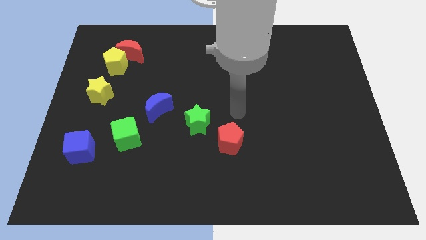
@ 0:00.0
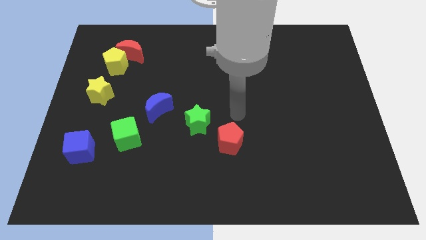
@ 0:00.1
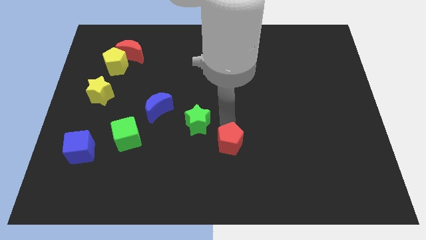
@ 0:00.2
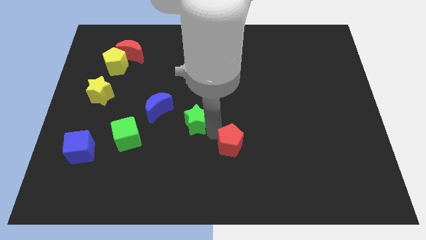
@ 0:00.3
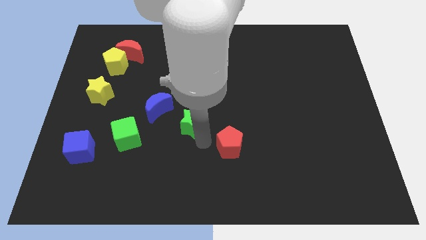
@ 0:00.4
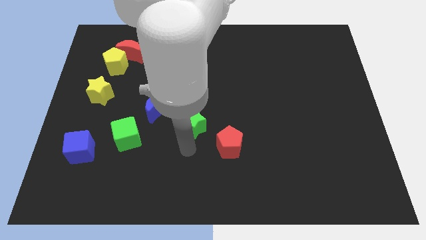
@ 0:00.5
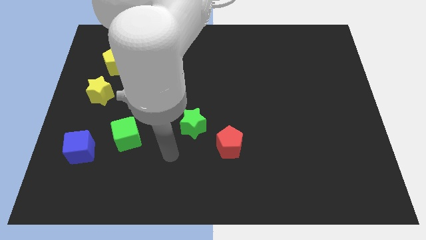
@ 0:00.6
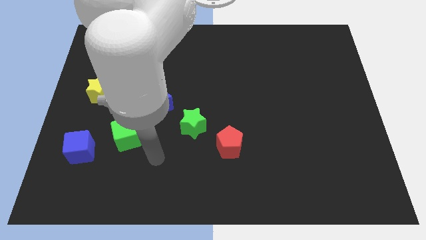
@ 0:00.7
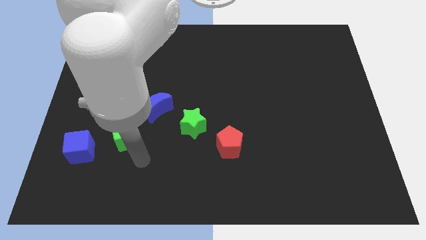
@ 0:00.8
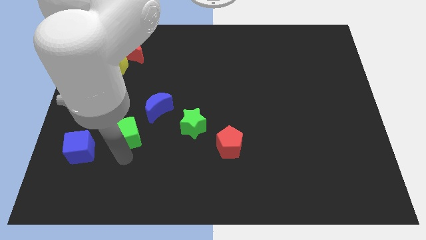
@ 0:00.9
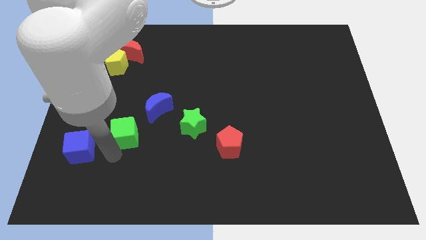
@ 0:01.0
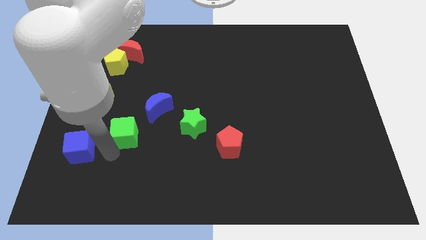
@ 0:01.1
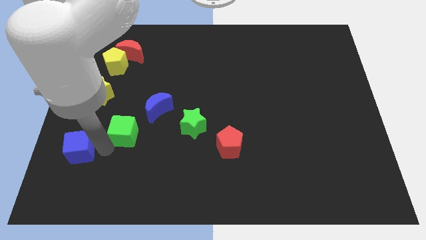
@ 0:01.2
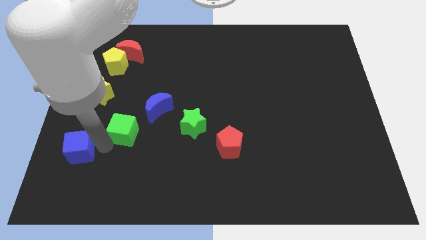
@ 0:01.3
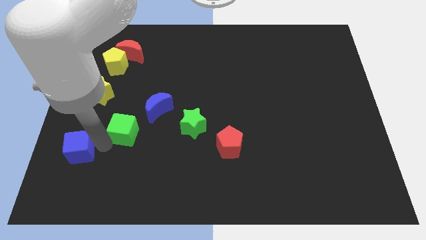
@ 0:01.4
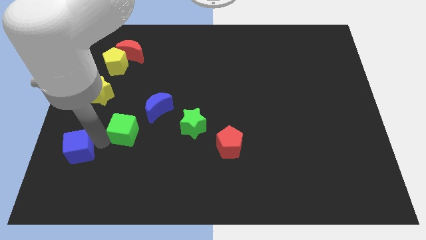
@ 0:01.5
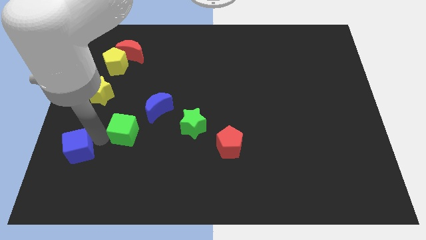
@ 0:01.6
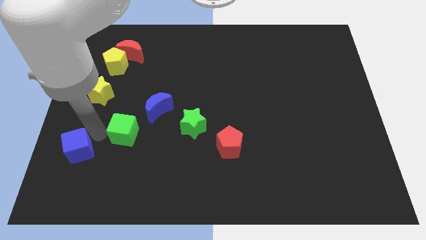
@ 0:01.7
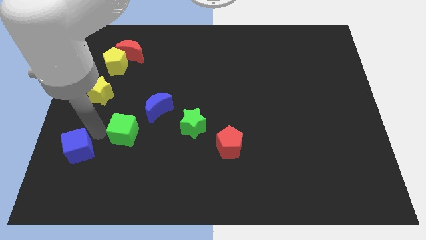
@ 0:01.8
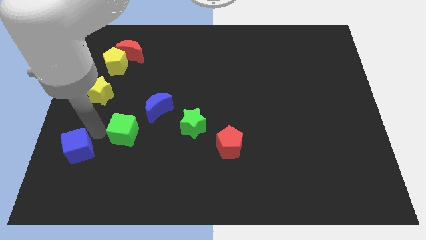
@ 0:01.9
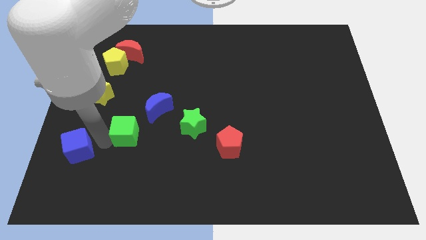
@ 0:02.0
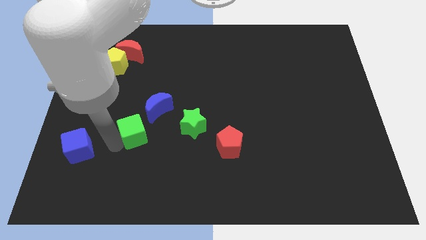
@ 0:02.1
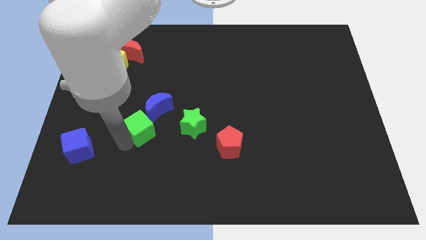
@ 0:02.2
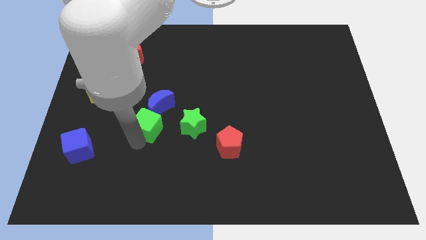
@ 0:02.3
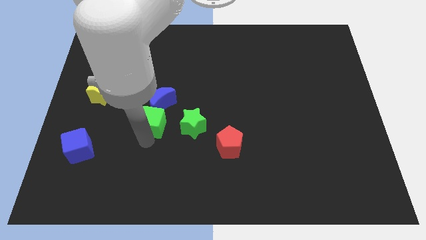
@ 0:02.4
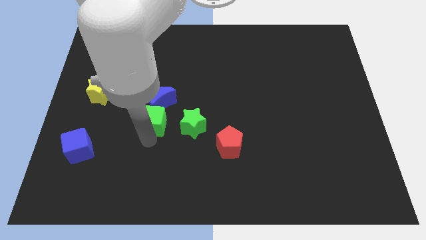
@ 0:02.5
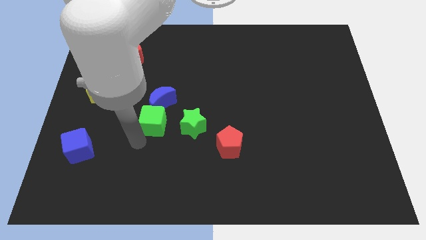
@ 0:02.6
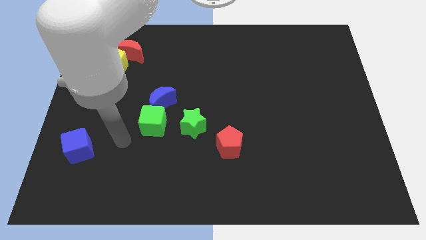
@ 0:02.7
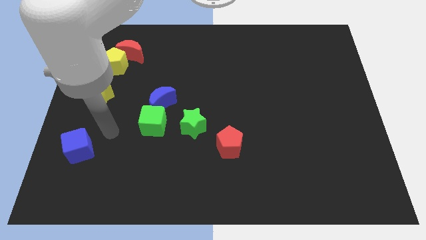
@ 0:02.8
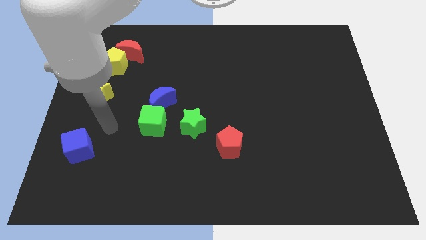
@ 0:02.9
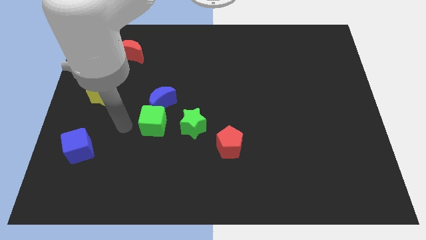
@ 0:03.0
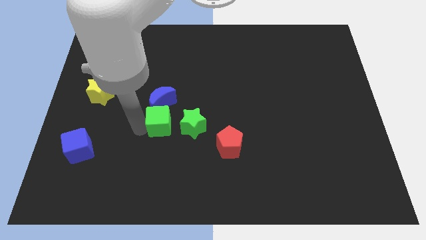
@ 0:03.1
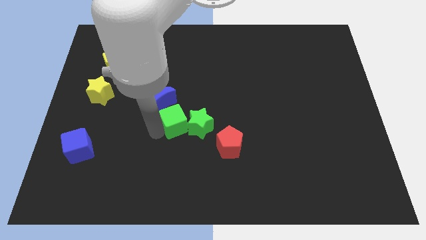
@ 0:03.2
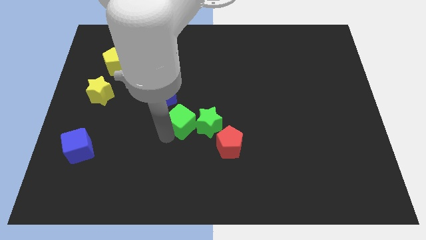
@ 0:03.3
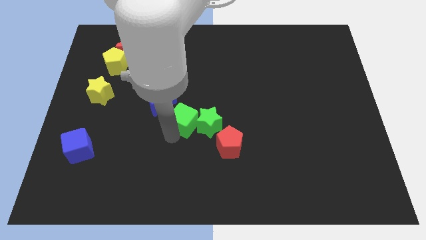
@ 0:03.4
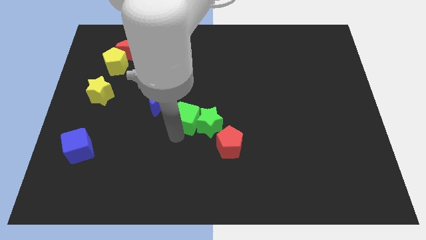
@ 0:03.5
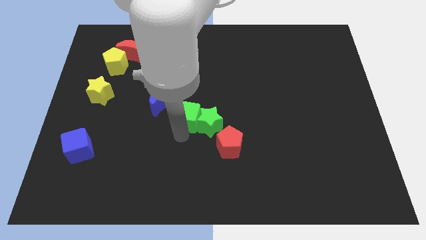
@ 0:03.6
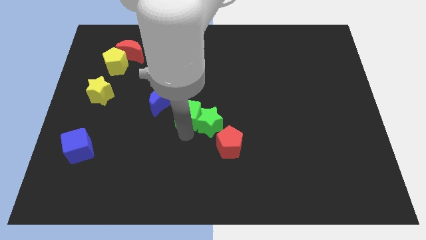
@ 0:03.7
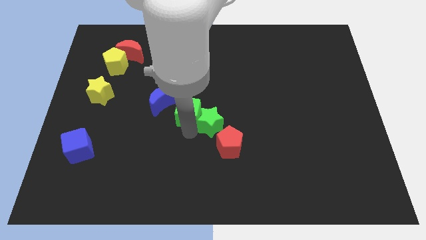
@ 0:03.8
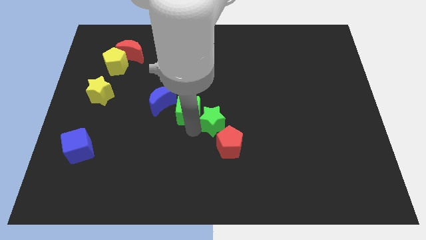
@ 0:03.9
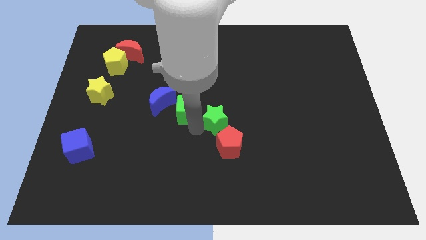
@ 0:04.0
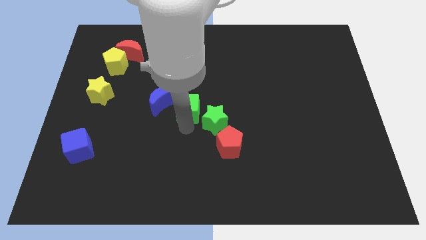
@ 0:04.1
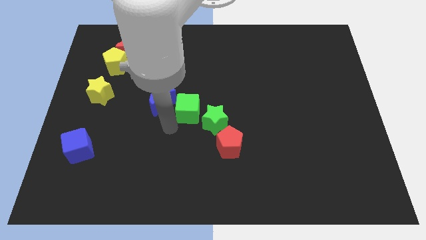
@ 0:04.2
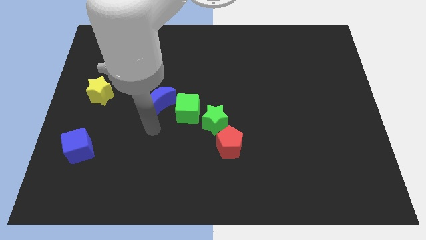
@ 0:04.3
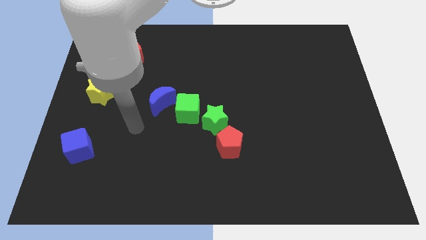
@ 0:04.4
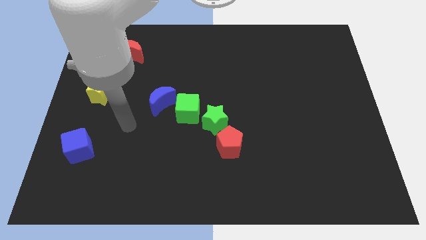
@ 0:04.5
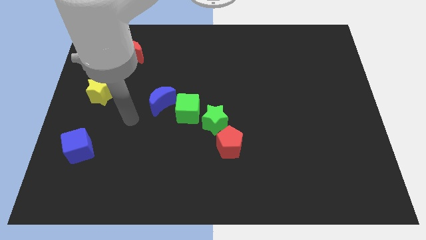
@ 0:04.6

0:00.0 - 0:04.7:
place the green cube in between blue crescent and the green star

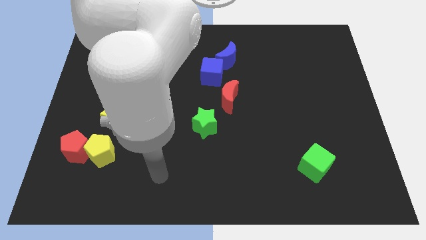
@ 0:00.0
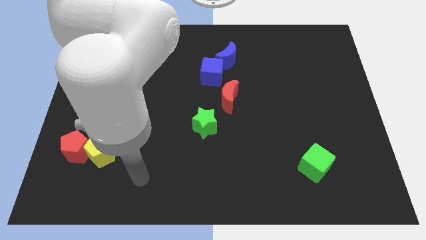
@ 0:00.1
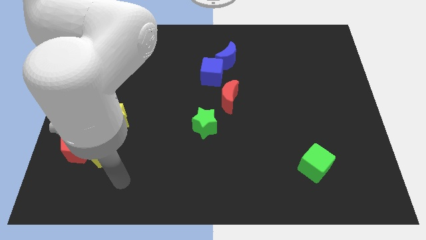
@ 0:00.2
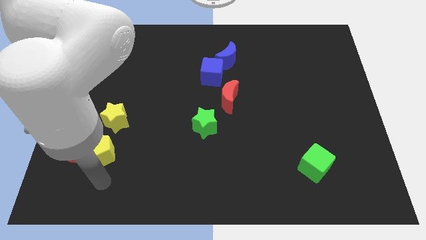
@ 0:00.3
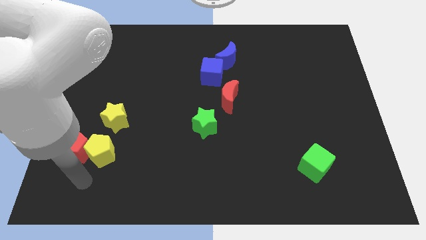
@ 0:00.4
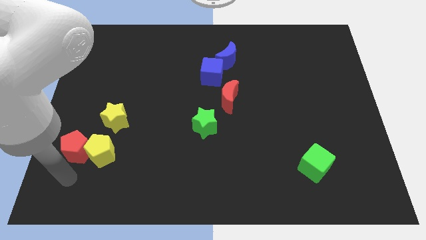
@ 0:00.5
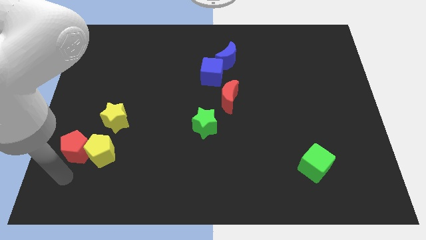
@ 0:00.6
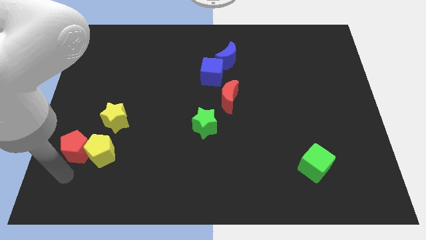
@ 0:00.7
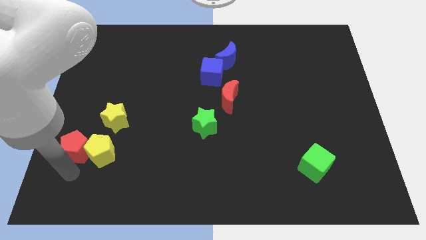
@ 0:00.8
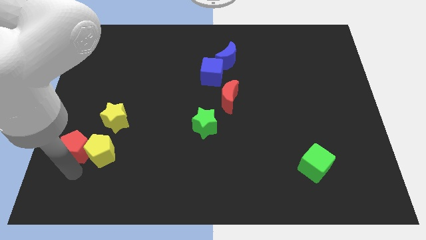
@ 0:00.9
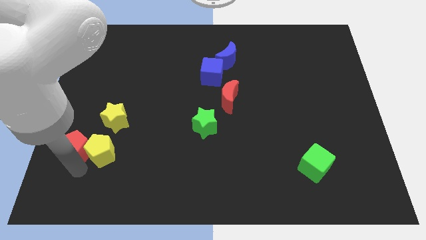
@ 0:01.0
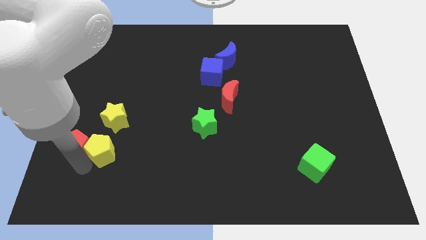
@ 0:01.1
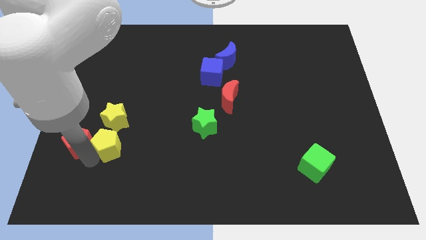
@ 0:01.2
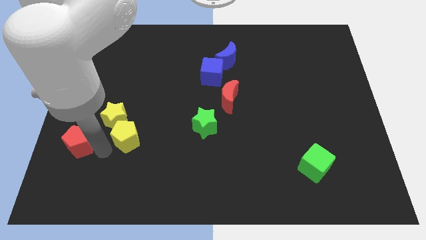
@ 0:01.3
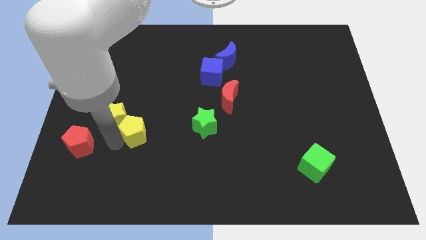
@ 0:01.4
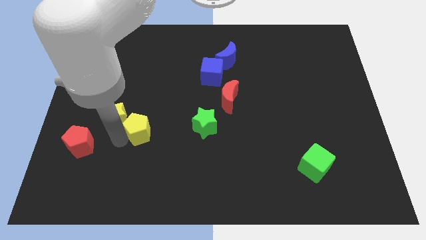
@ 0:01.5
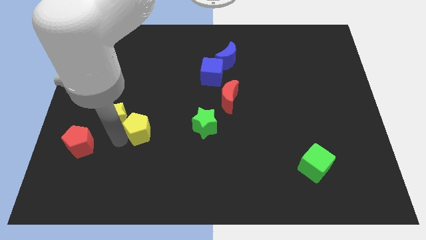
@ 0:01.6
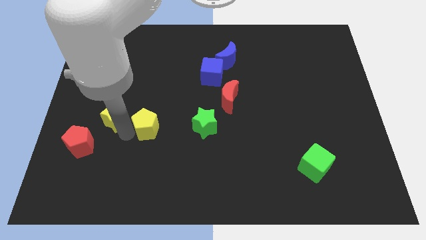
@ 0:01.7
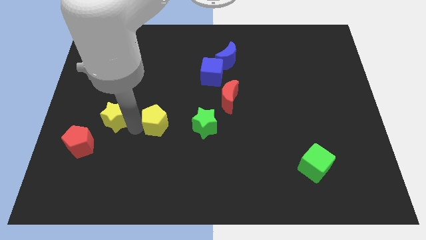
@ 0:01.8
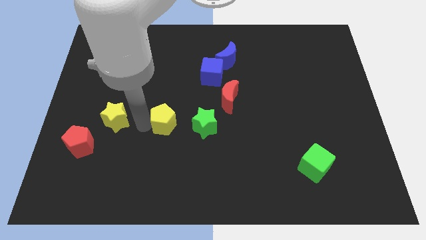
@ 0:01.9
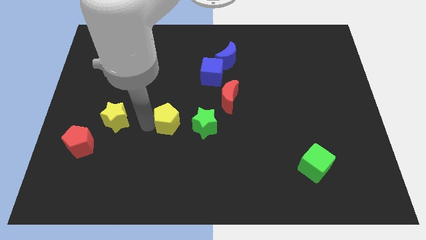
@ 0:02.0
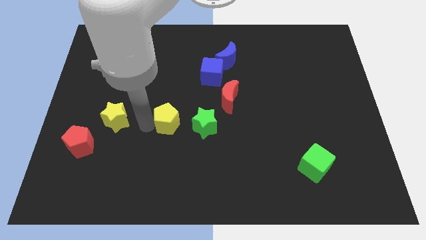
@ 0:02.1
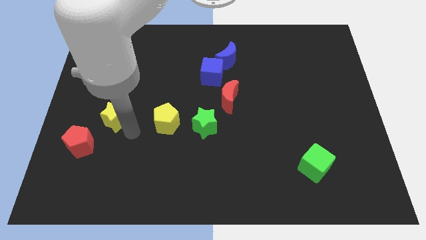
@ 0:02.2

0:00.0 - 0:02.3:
separate the yellow pentagon between green and yellow star

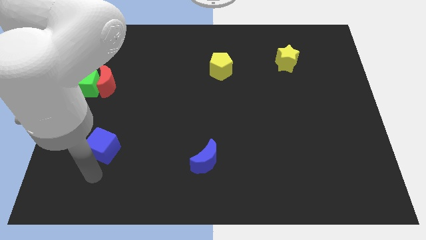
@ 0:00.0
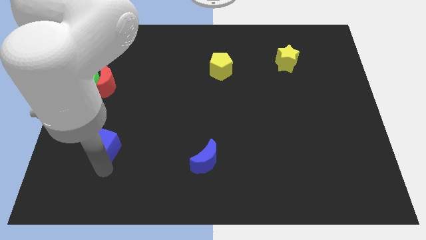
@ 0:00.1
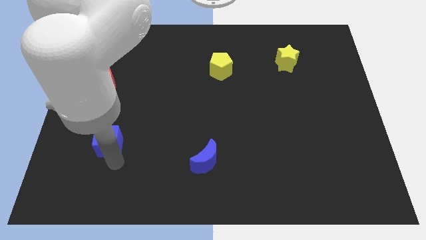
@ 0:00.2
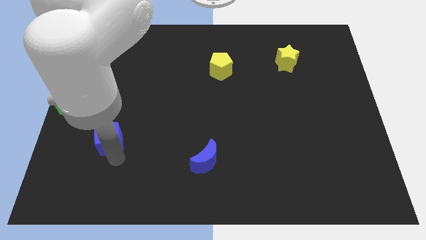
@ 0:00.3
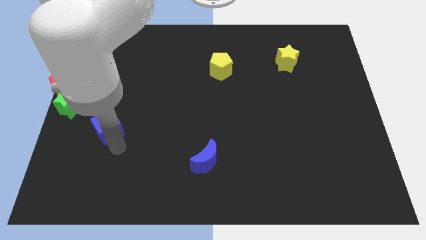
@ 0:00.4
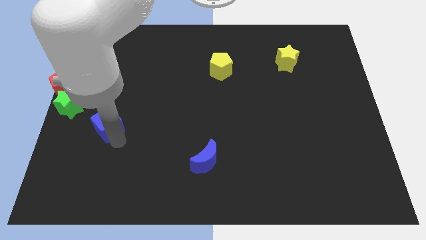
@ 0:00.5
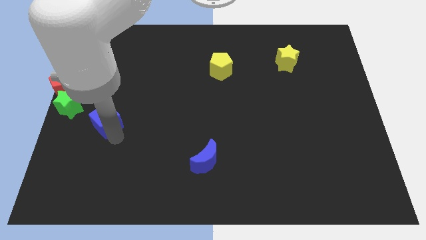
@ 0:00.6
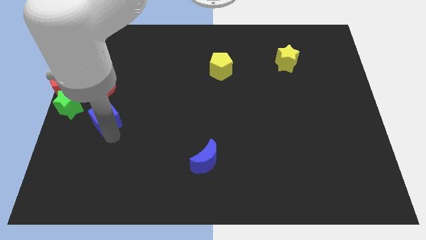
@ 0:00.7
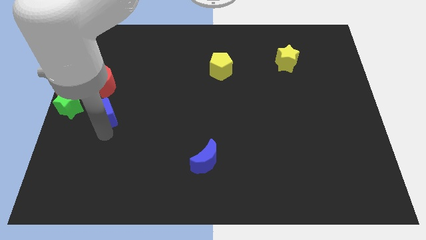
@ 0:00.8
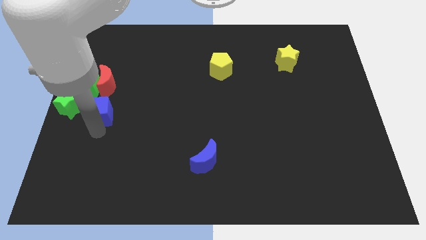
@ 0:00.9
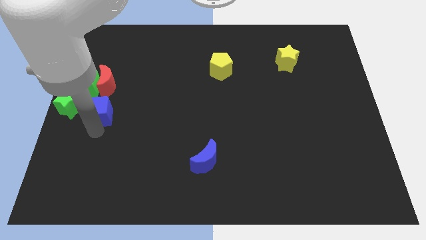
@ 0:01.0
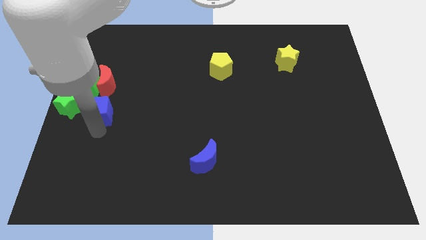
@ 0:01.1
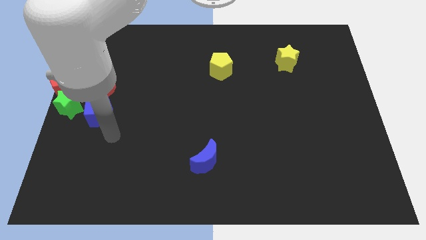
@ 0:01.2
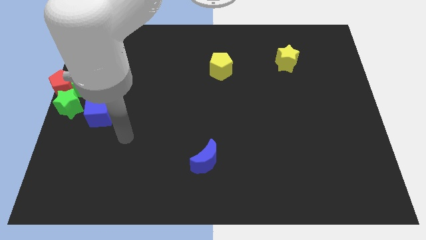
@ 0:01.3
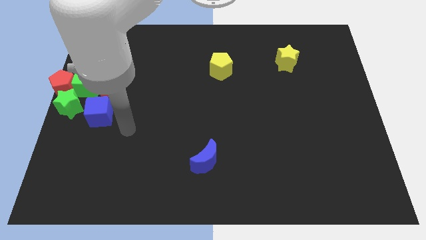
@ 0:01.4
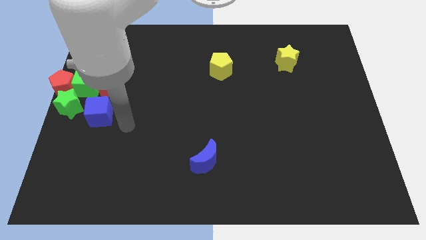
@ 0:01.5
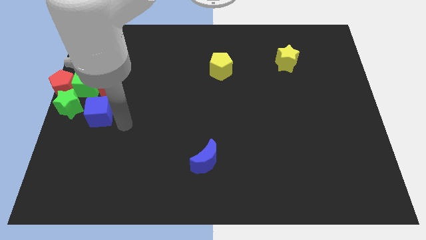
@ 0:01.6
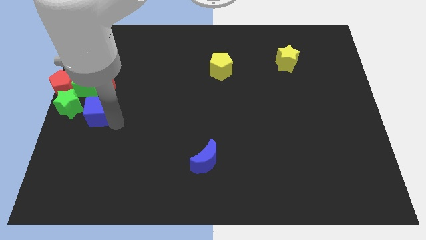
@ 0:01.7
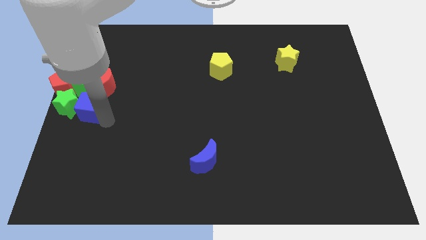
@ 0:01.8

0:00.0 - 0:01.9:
move the blue cube into a group of object

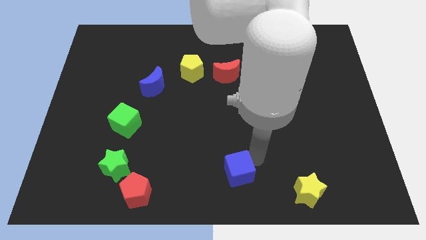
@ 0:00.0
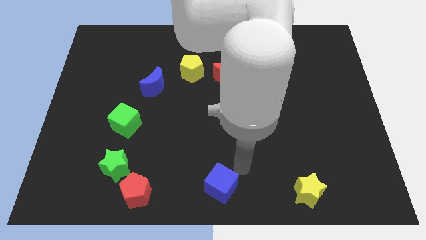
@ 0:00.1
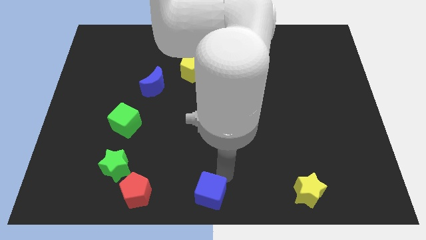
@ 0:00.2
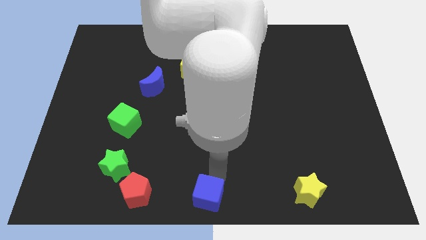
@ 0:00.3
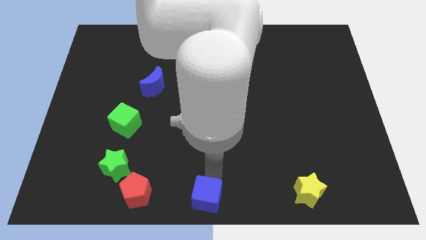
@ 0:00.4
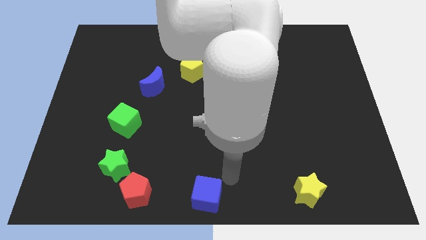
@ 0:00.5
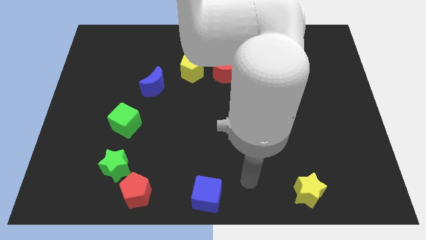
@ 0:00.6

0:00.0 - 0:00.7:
drag the blue cube slightly downwards
